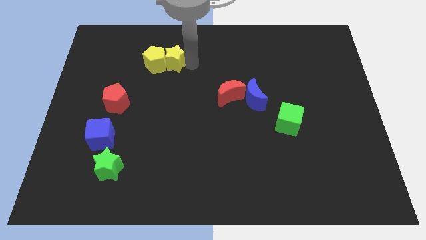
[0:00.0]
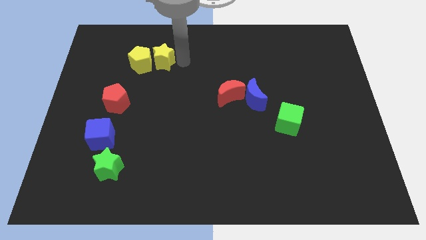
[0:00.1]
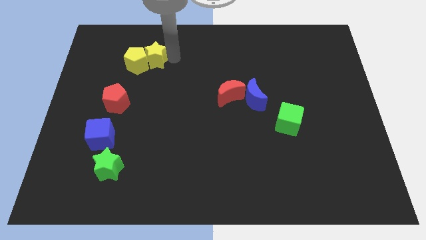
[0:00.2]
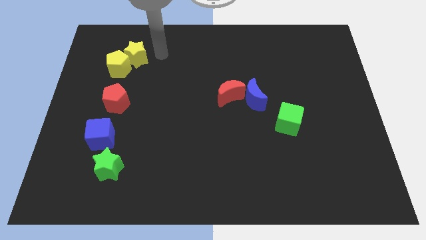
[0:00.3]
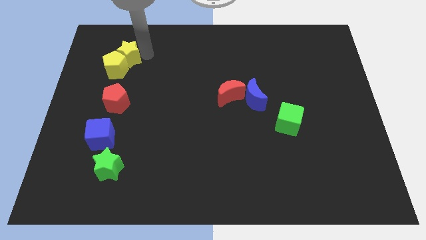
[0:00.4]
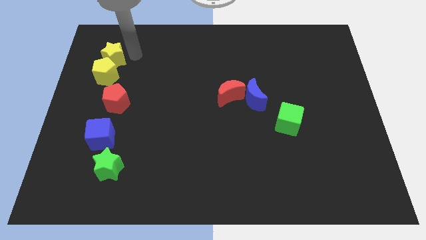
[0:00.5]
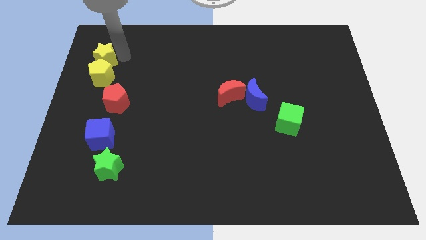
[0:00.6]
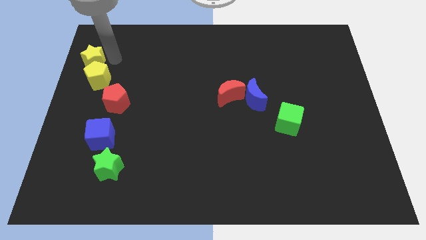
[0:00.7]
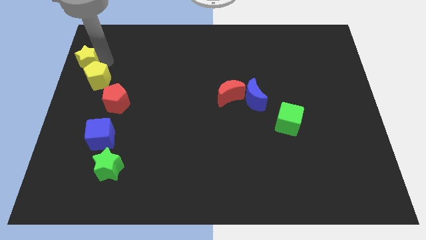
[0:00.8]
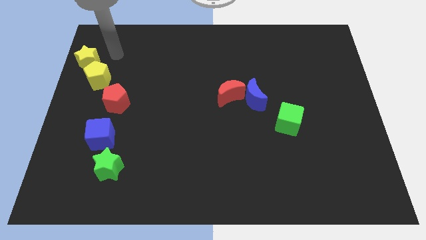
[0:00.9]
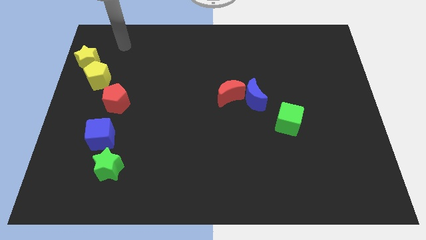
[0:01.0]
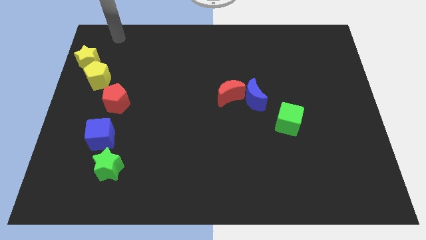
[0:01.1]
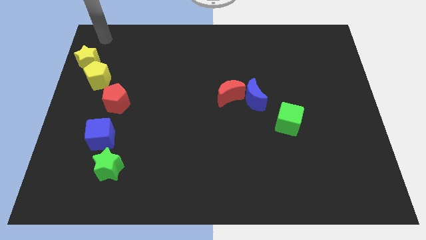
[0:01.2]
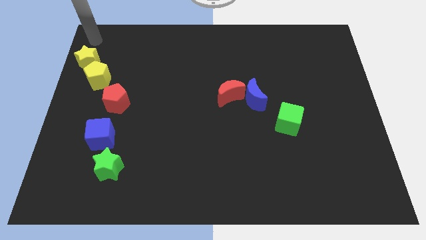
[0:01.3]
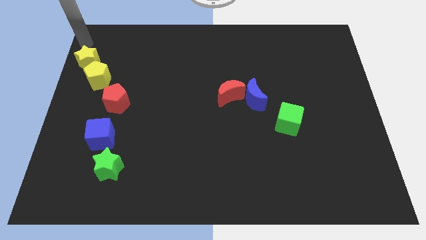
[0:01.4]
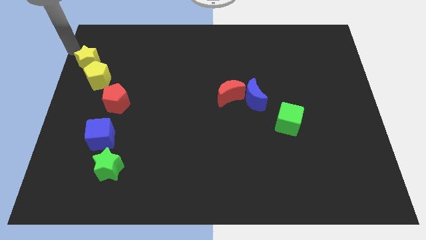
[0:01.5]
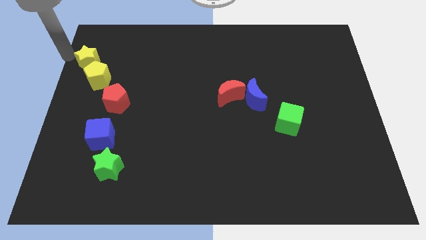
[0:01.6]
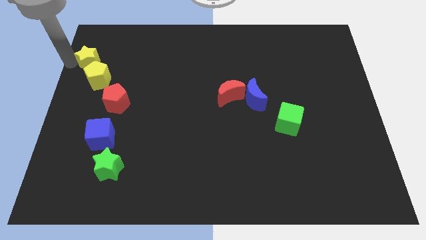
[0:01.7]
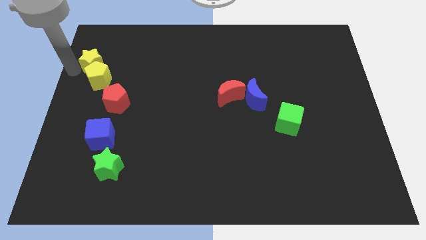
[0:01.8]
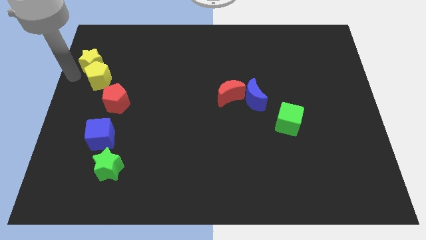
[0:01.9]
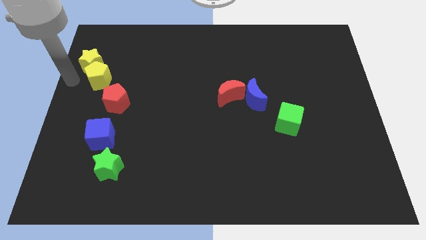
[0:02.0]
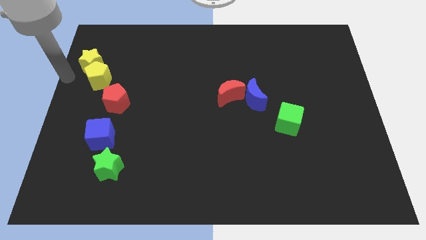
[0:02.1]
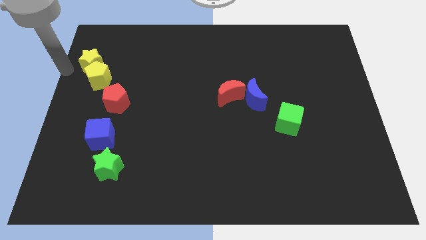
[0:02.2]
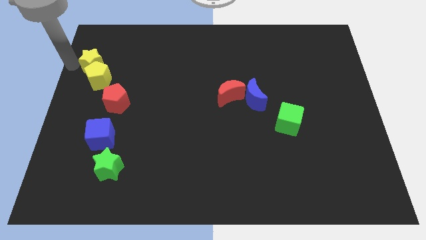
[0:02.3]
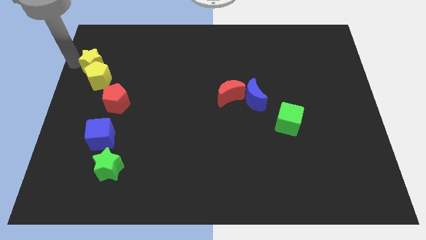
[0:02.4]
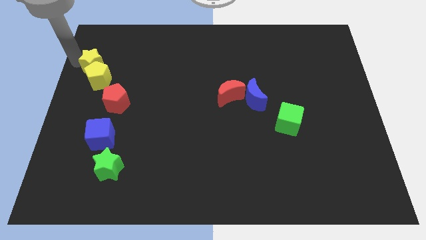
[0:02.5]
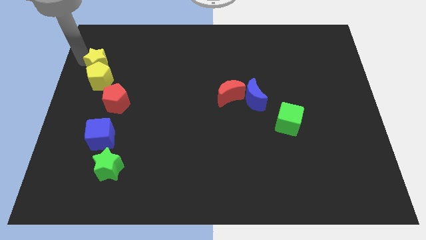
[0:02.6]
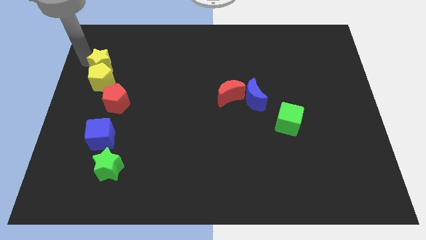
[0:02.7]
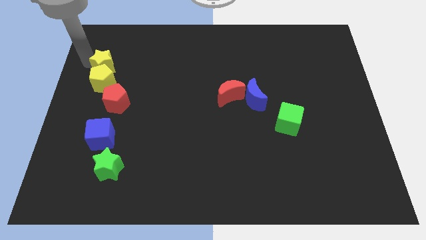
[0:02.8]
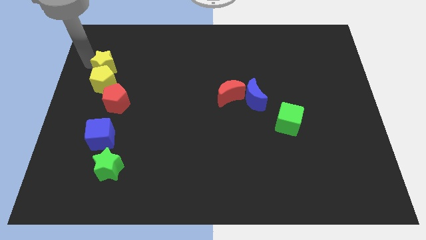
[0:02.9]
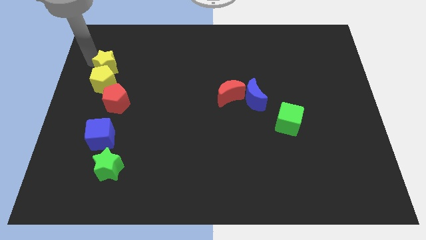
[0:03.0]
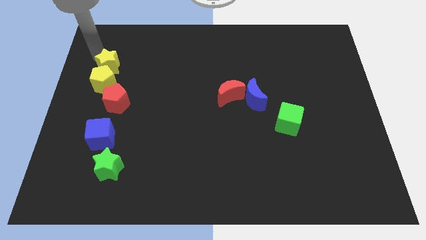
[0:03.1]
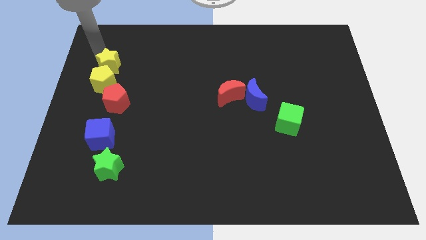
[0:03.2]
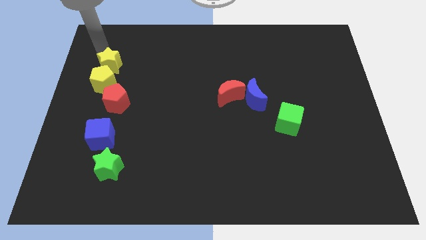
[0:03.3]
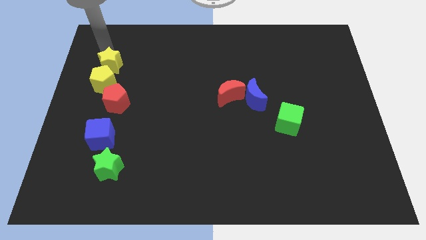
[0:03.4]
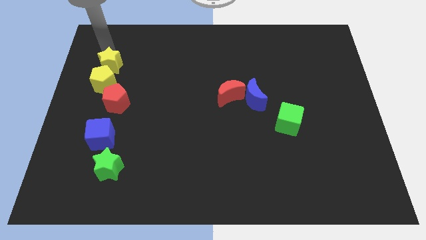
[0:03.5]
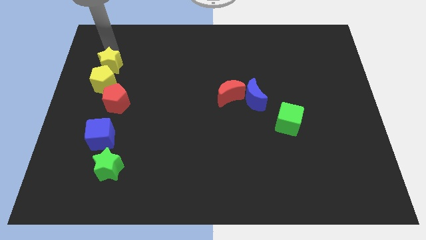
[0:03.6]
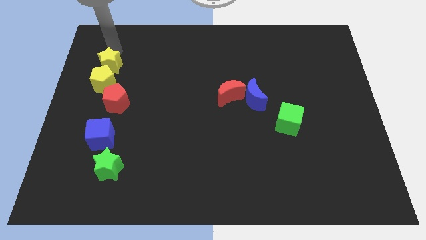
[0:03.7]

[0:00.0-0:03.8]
move the yellow blocks near the red pentagon

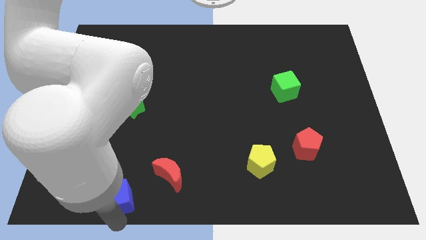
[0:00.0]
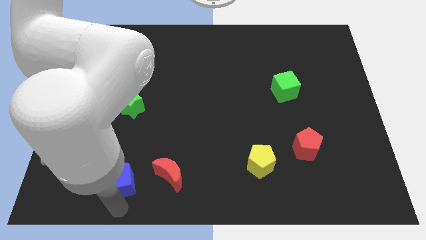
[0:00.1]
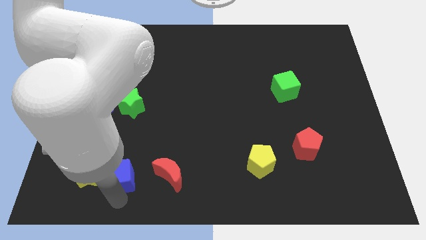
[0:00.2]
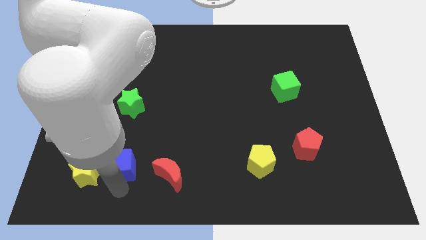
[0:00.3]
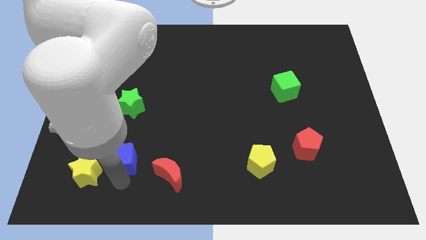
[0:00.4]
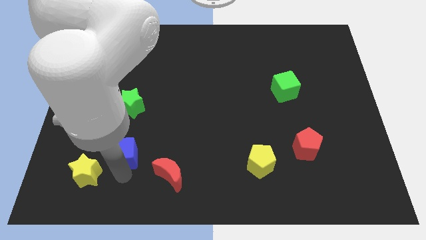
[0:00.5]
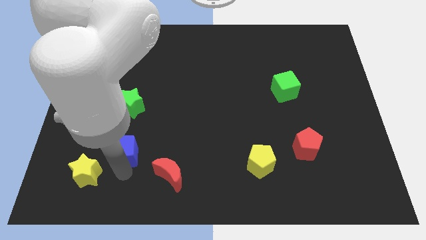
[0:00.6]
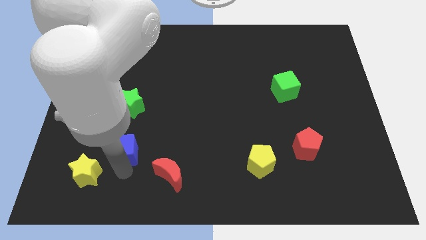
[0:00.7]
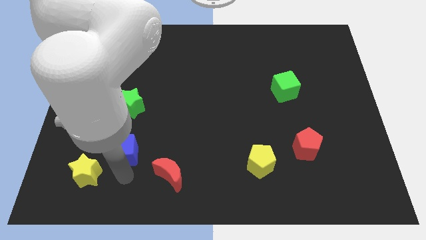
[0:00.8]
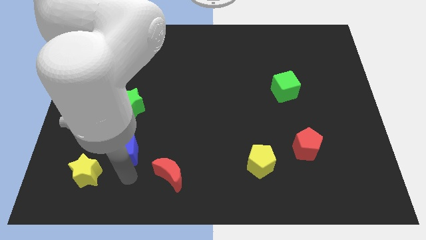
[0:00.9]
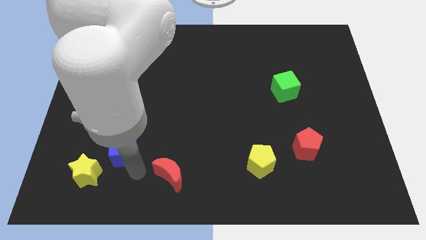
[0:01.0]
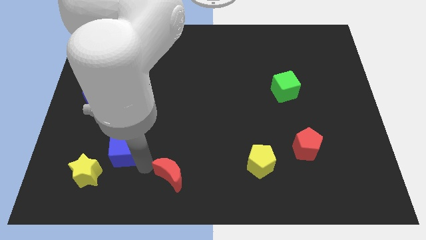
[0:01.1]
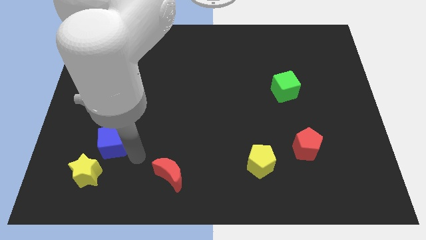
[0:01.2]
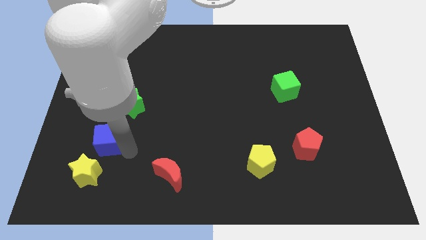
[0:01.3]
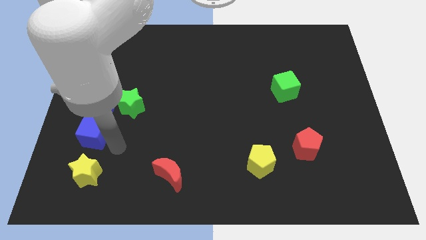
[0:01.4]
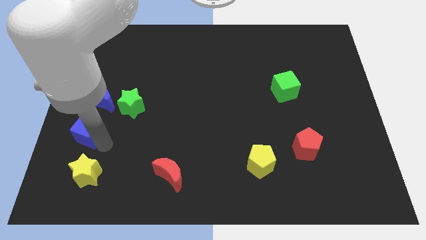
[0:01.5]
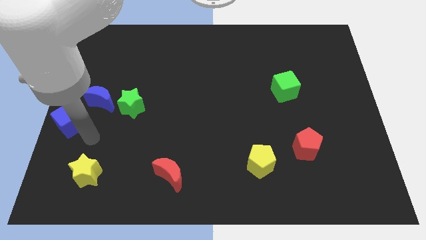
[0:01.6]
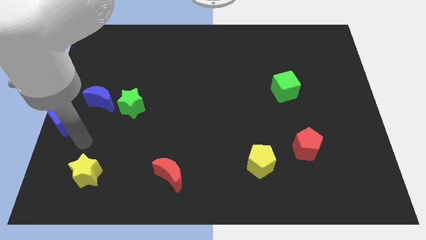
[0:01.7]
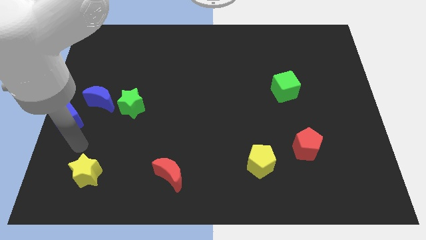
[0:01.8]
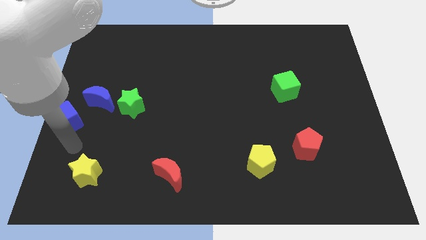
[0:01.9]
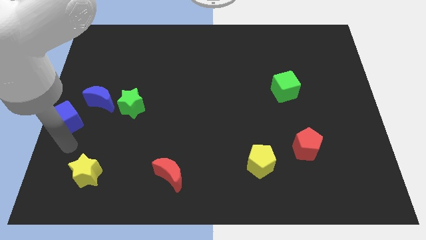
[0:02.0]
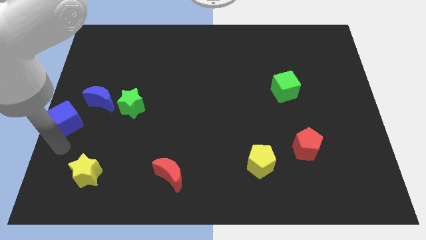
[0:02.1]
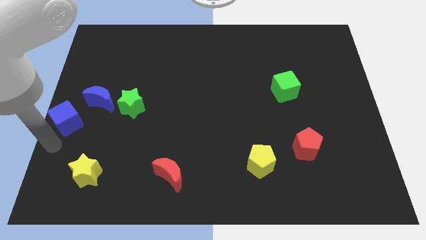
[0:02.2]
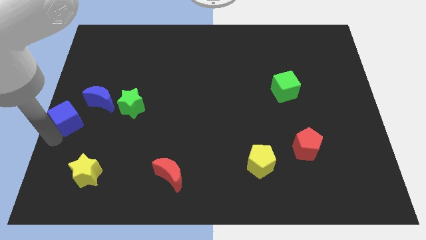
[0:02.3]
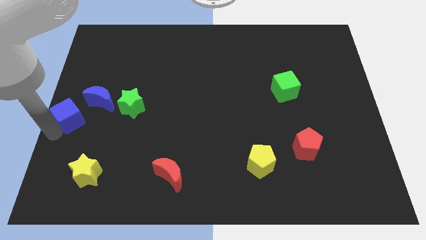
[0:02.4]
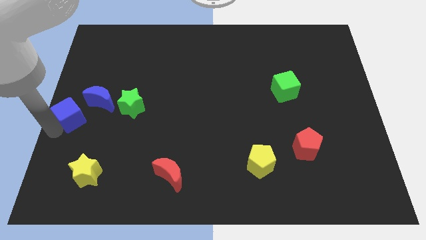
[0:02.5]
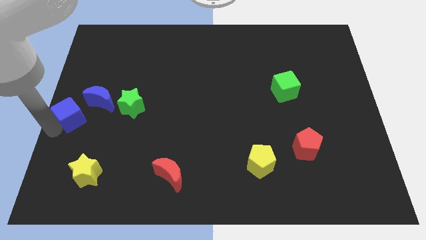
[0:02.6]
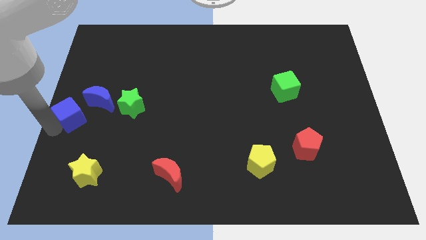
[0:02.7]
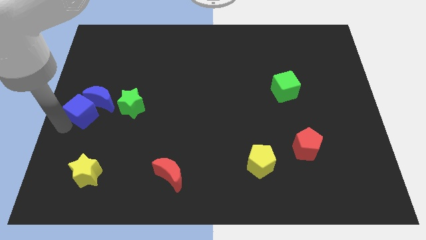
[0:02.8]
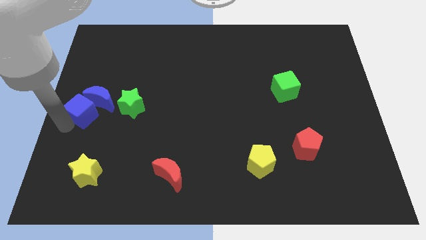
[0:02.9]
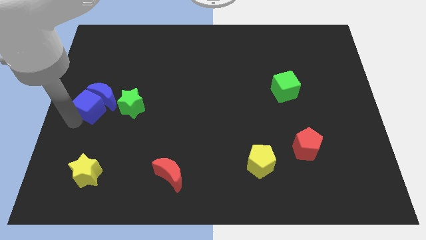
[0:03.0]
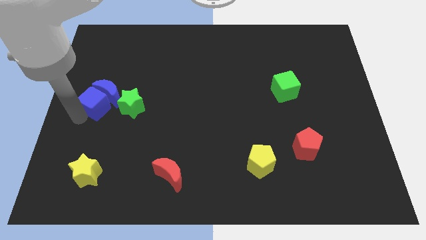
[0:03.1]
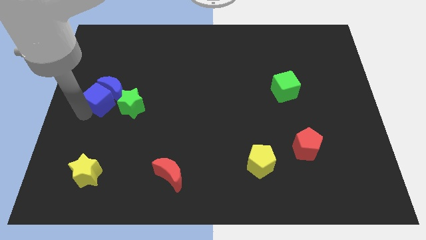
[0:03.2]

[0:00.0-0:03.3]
push blue cube into blue crescent

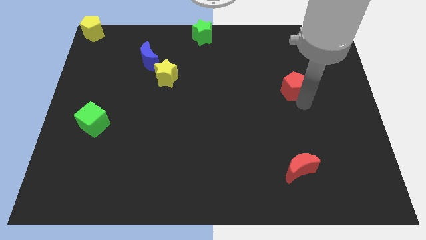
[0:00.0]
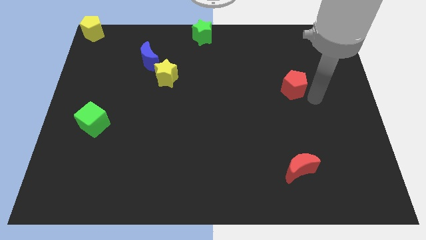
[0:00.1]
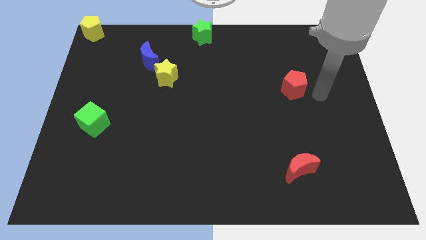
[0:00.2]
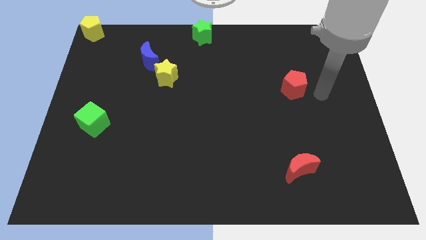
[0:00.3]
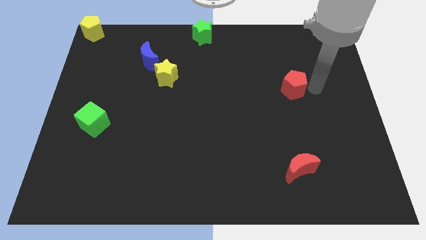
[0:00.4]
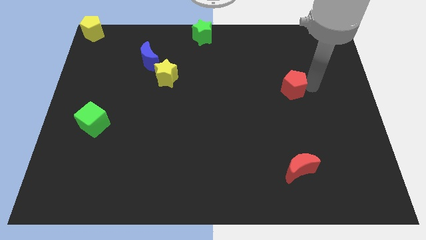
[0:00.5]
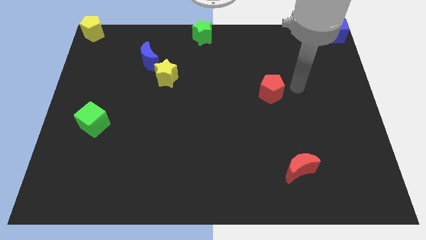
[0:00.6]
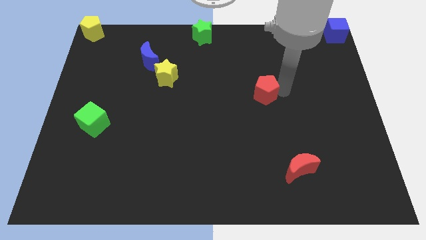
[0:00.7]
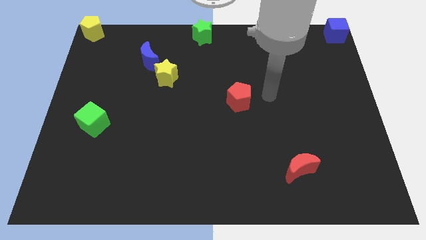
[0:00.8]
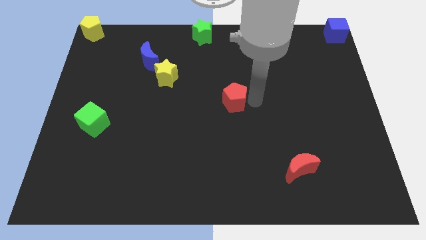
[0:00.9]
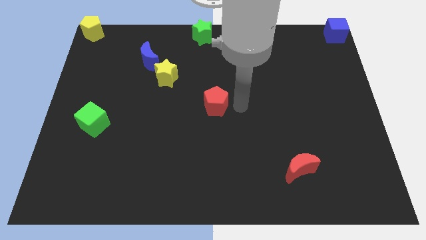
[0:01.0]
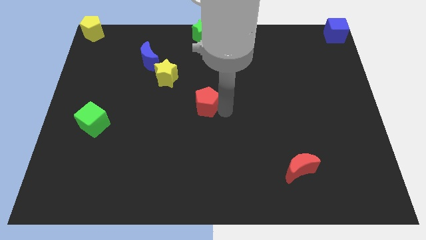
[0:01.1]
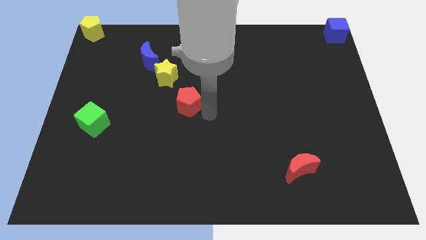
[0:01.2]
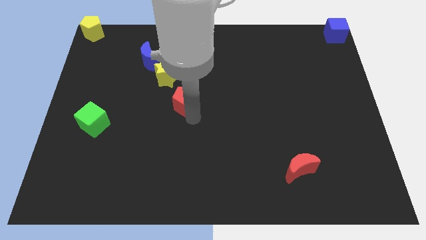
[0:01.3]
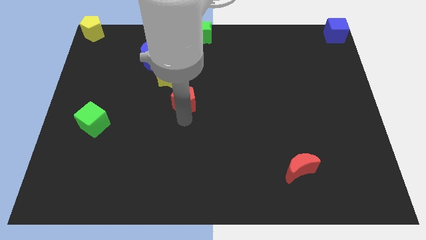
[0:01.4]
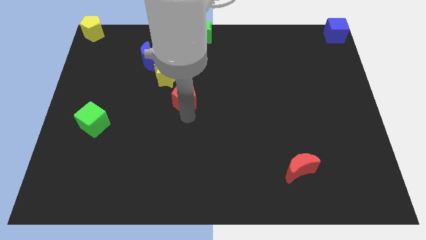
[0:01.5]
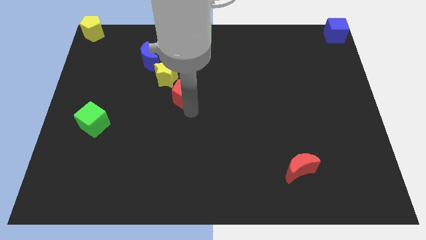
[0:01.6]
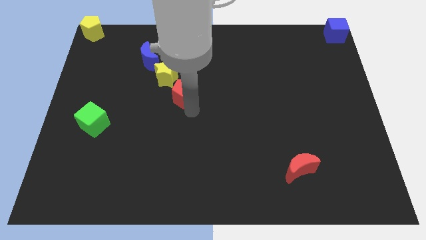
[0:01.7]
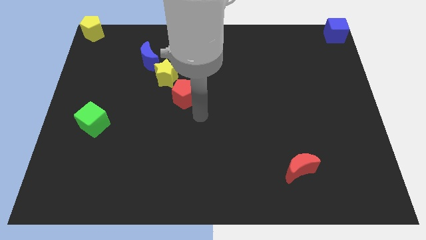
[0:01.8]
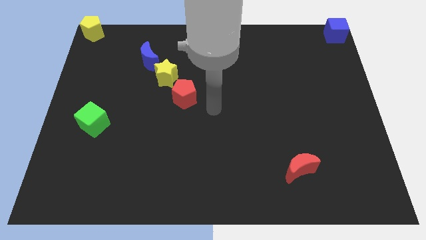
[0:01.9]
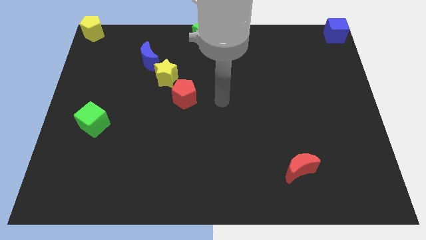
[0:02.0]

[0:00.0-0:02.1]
place the red pentagon below yellow star in diagonal position
